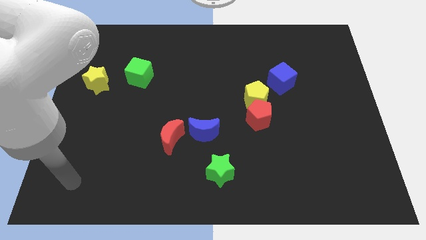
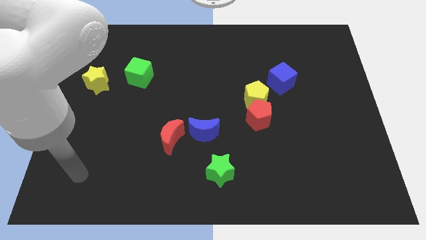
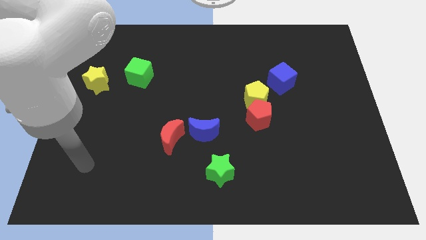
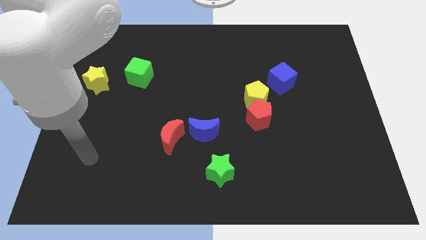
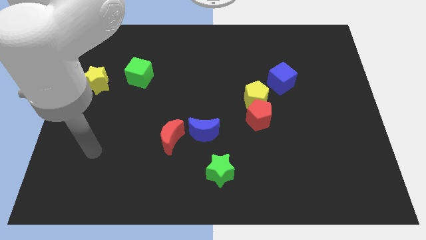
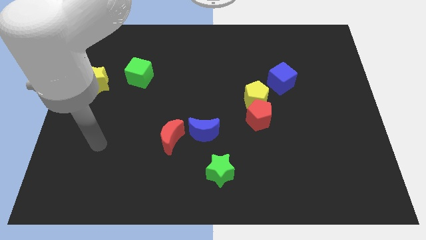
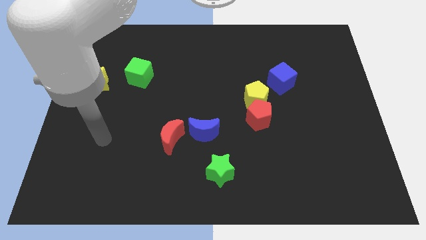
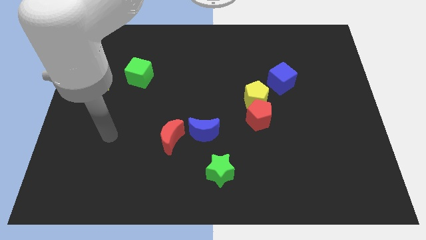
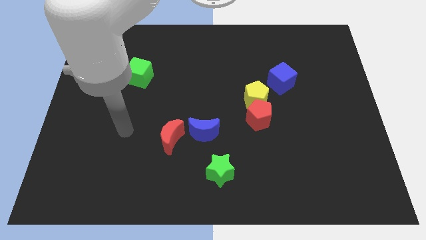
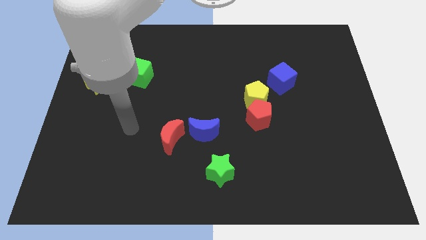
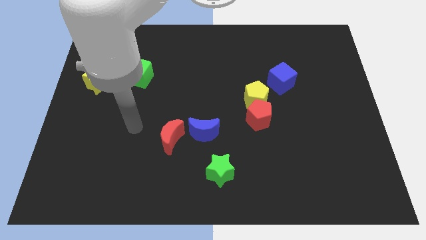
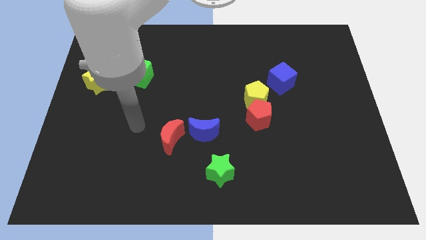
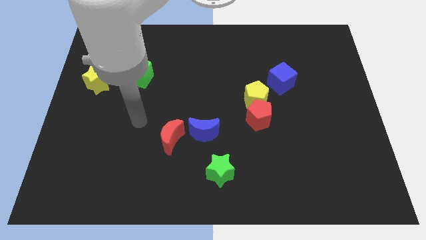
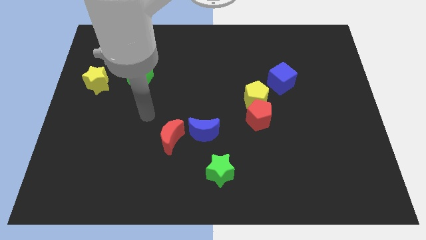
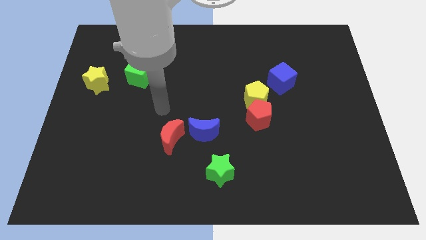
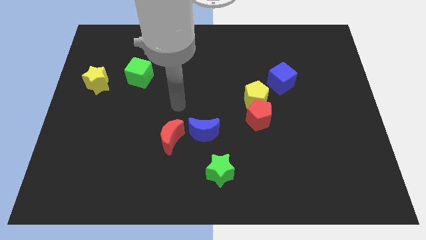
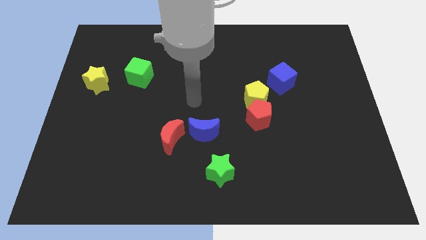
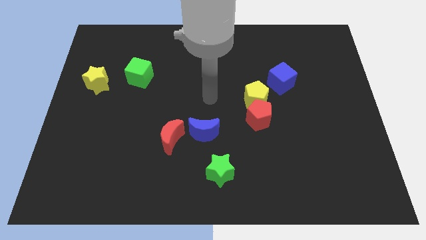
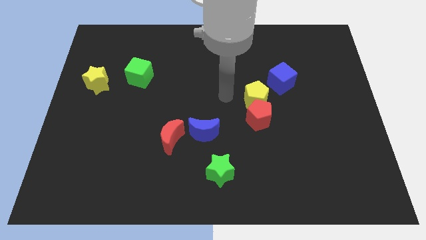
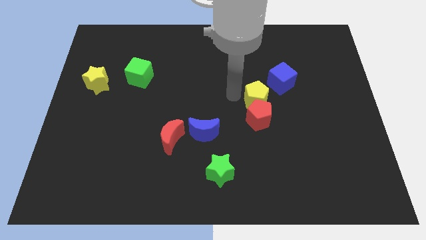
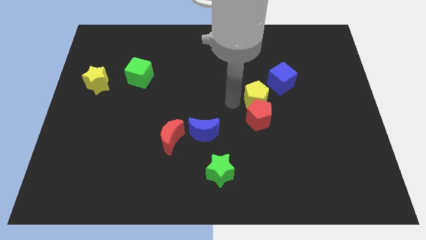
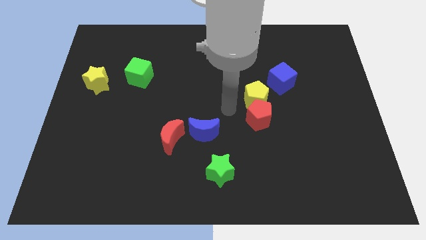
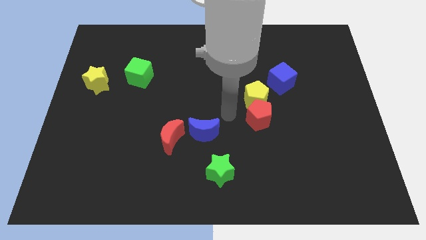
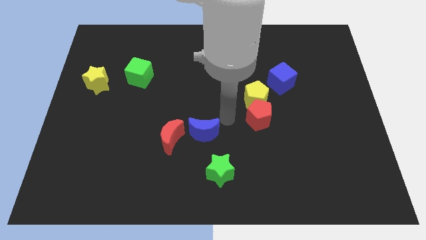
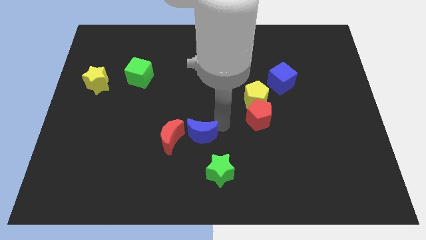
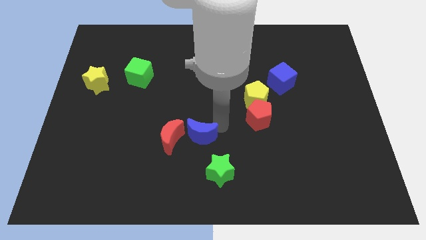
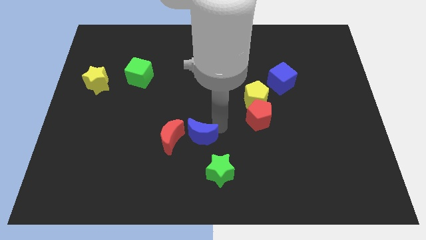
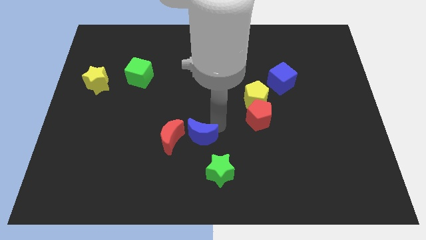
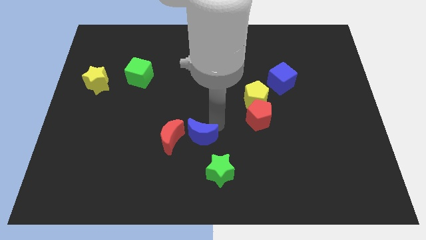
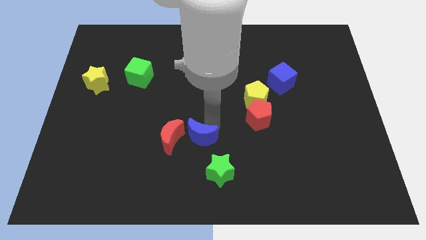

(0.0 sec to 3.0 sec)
move the arm towards the middle of the board

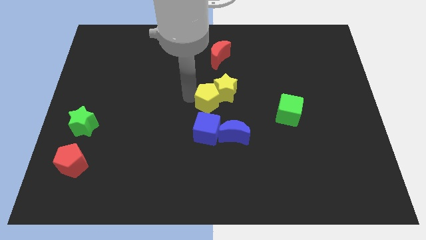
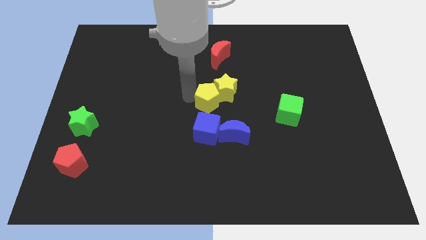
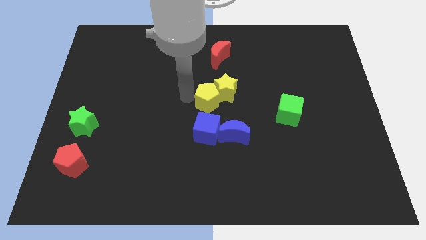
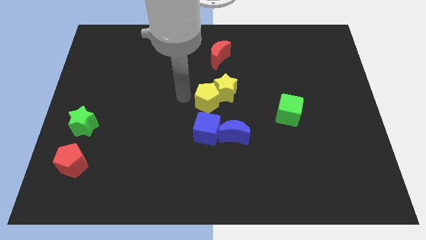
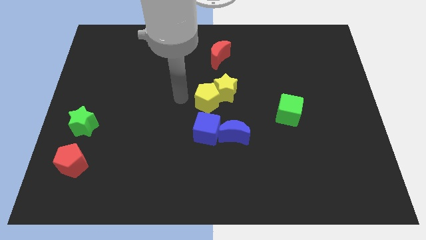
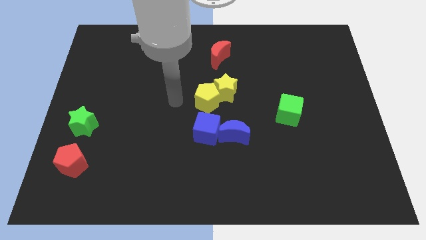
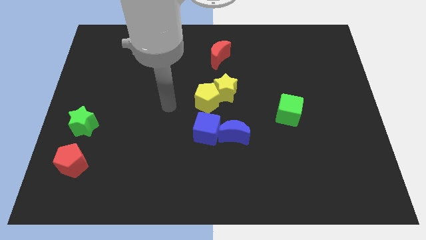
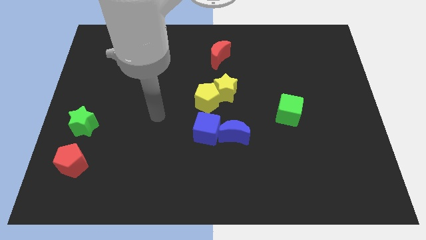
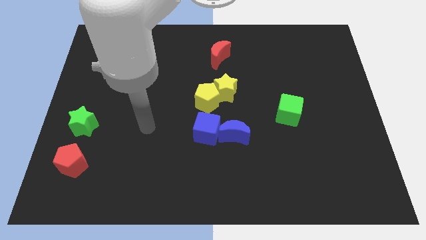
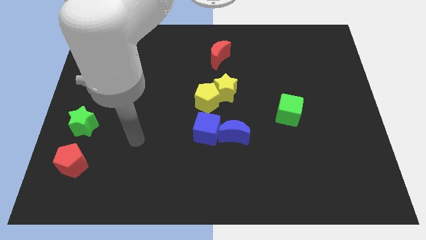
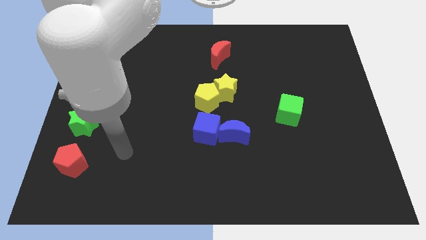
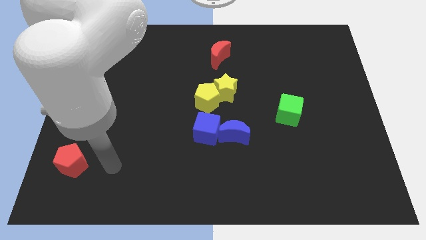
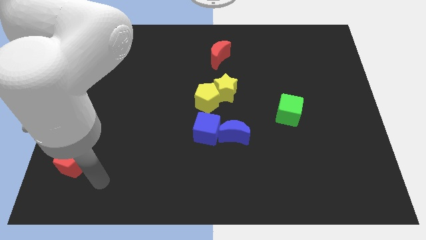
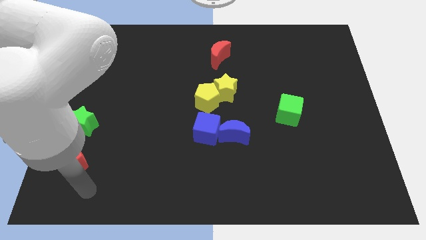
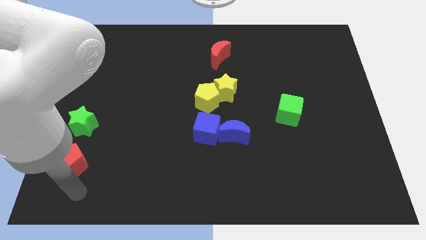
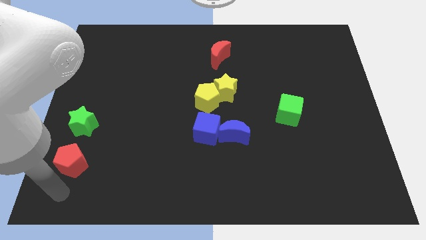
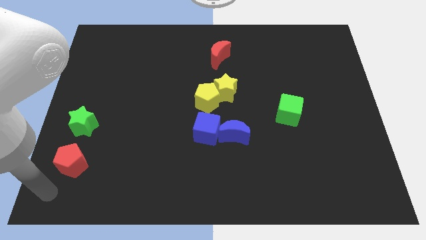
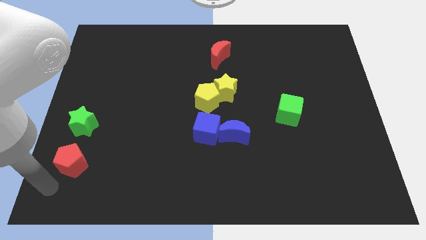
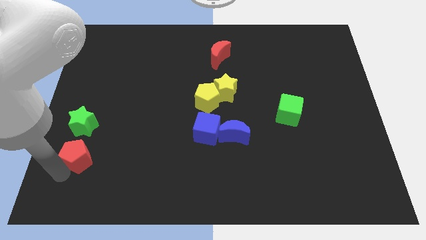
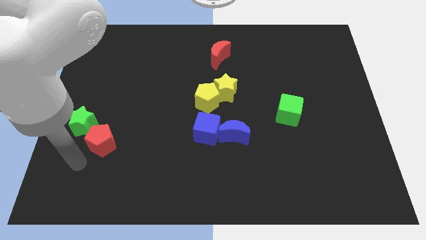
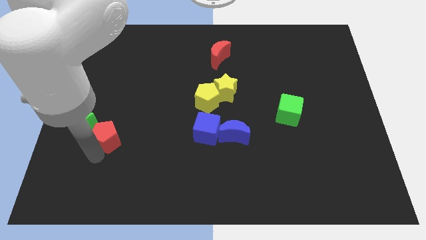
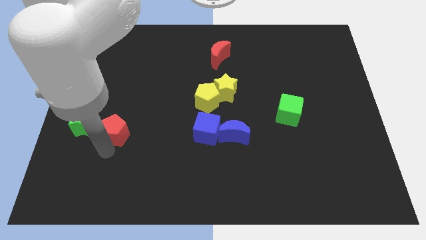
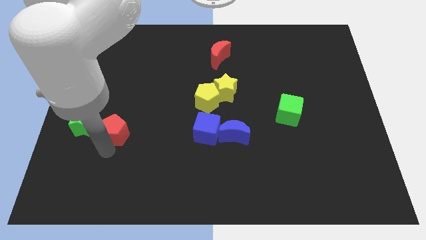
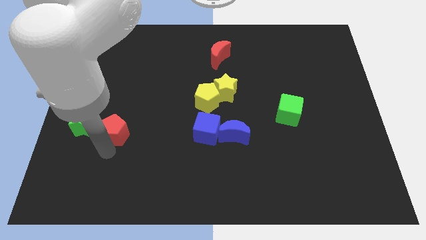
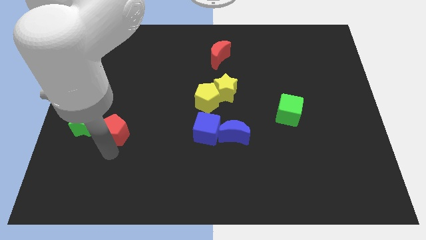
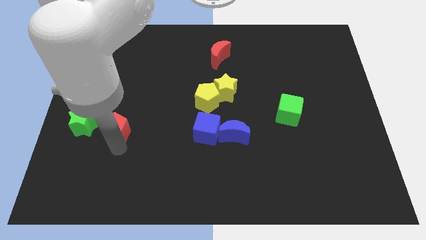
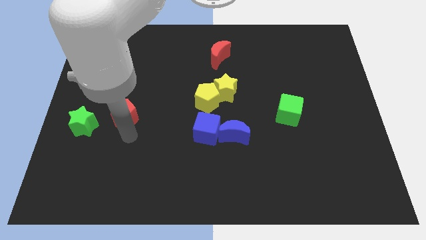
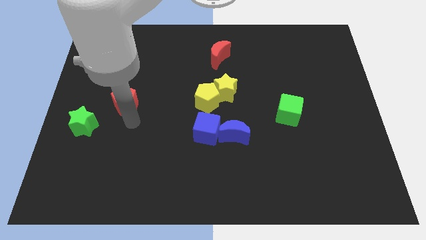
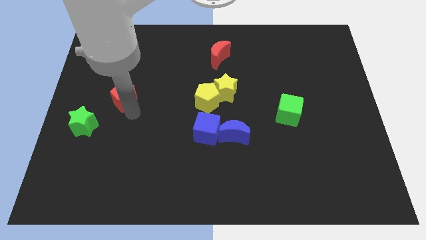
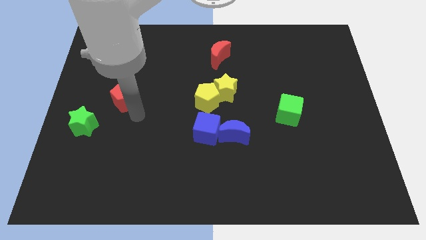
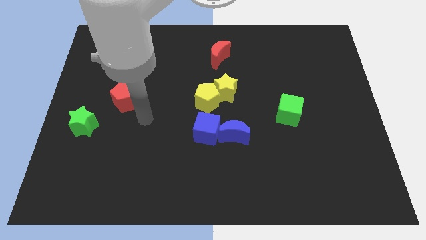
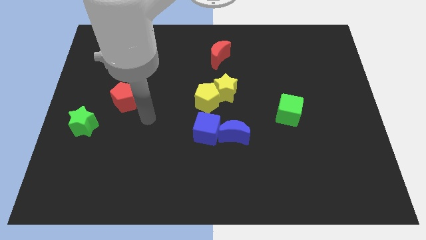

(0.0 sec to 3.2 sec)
move the red pentagon to the top right of the green star

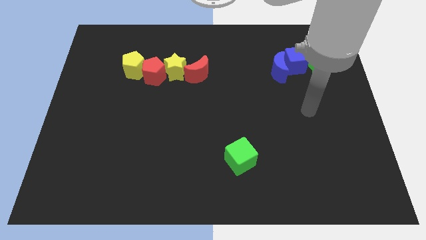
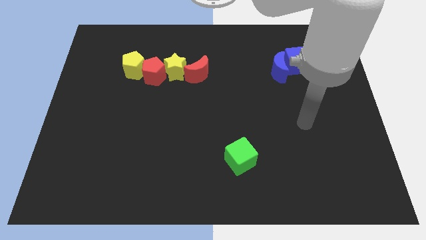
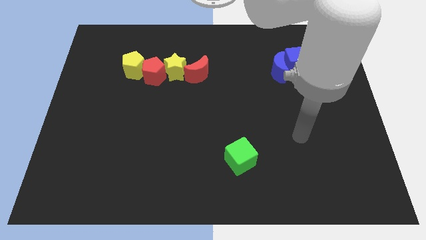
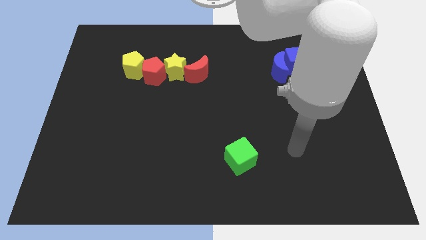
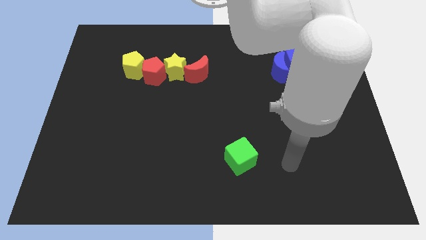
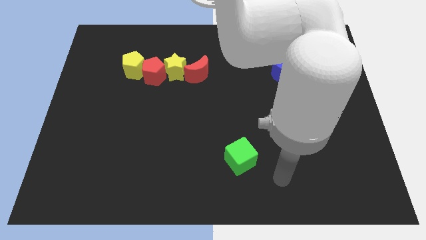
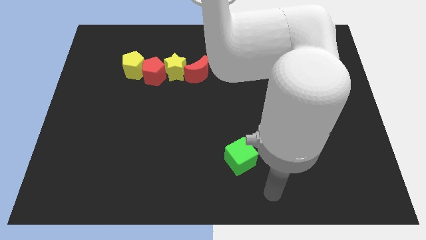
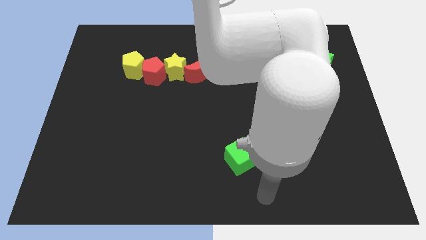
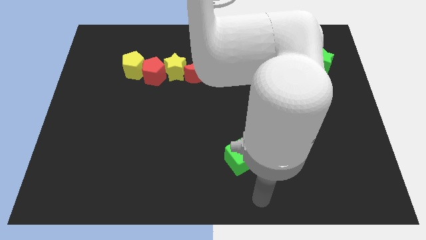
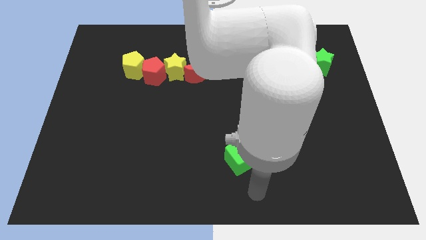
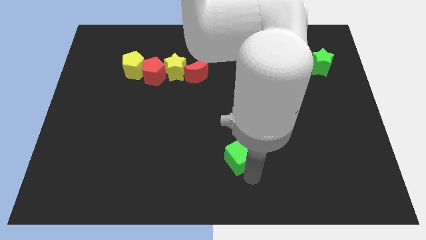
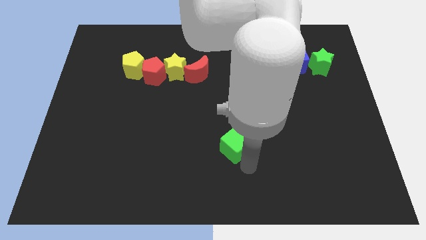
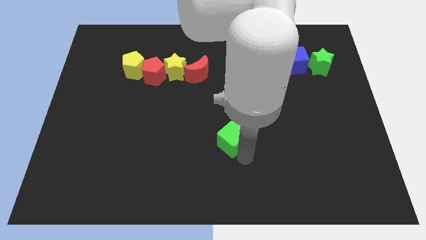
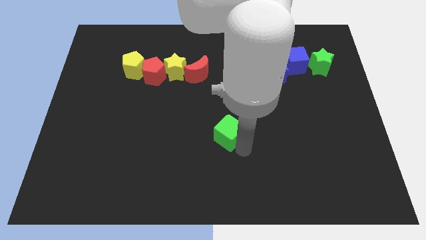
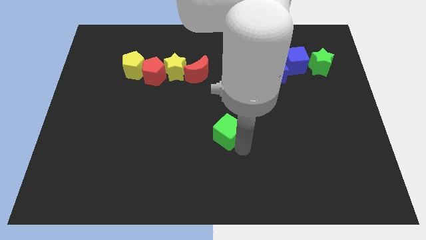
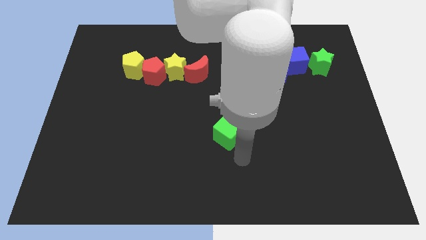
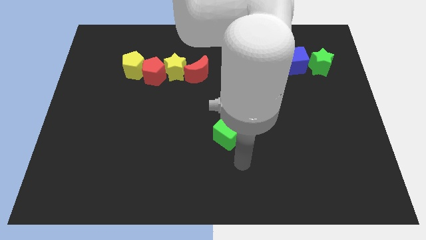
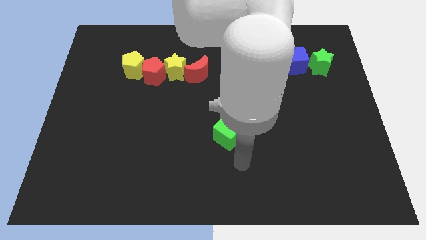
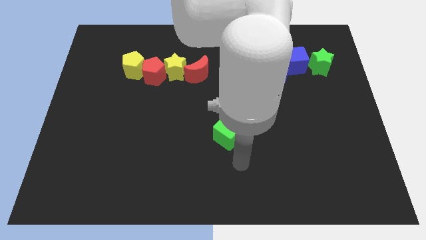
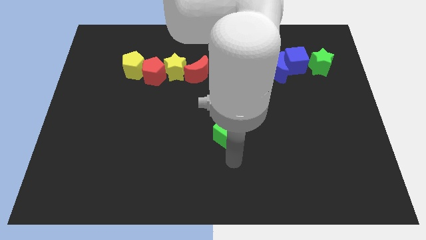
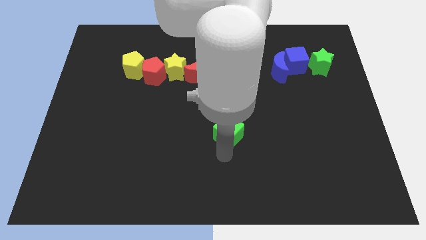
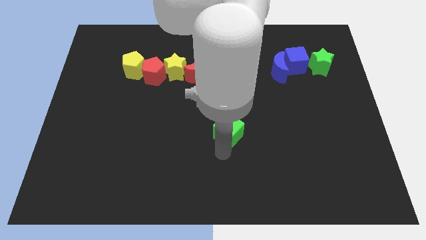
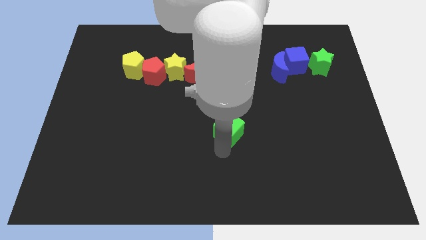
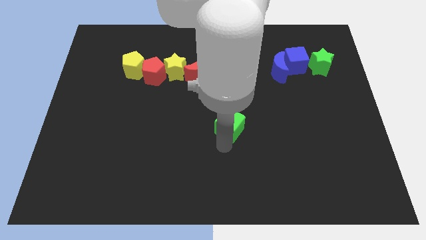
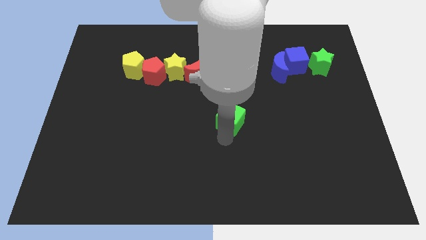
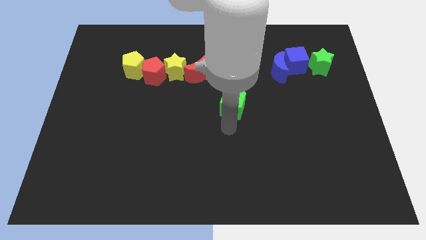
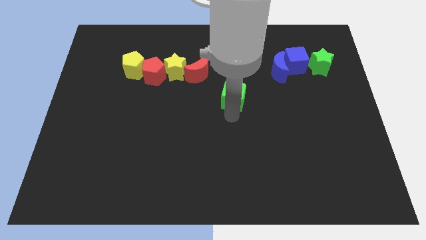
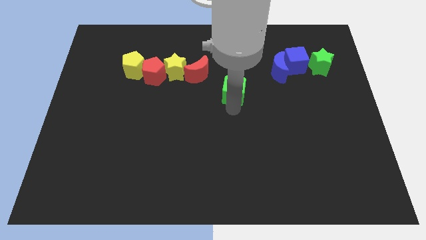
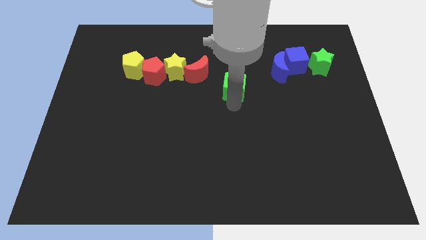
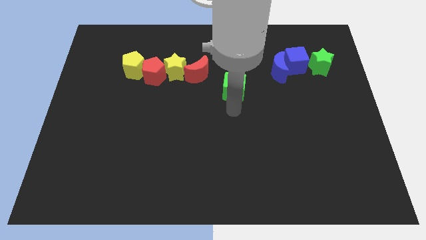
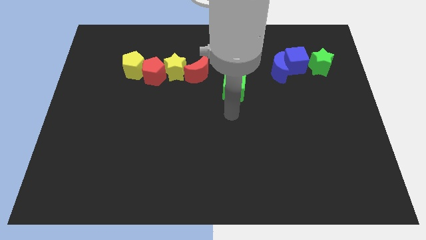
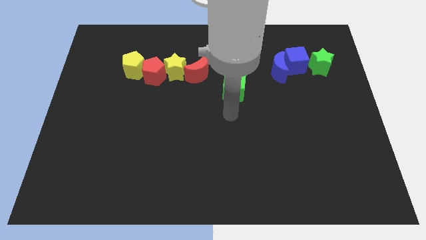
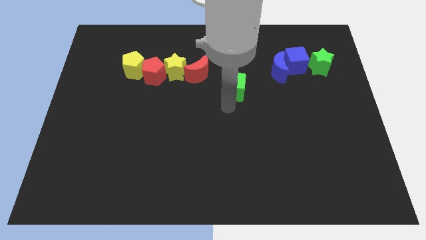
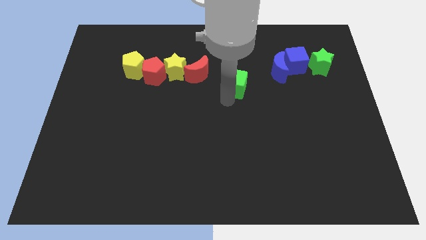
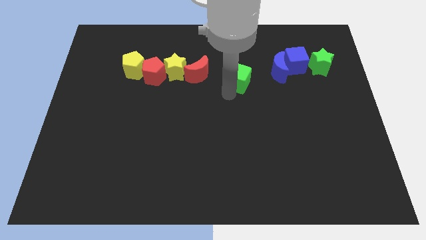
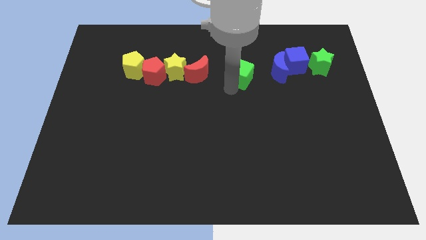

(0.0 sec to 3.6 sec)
place the green cube right to the red moon
